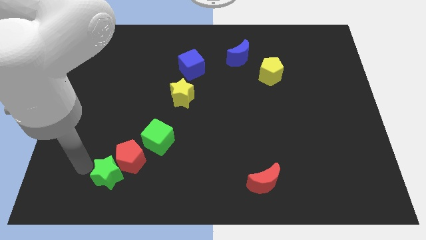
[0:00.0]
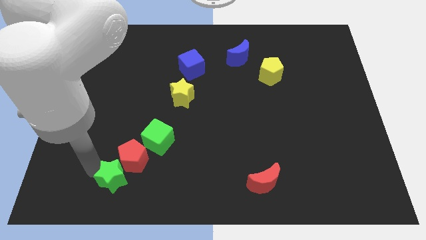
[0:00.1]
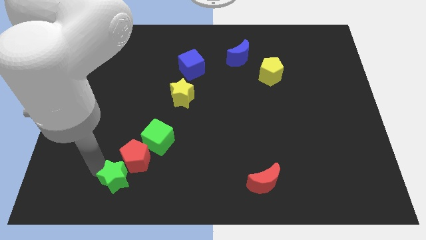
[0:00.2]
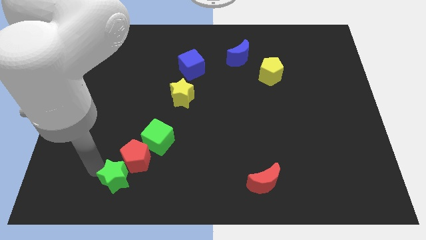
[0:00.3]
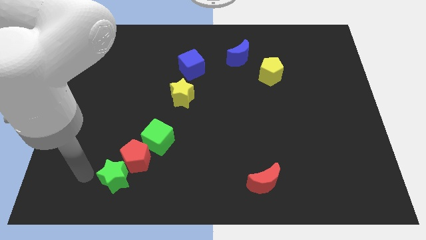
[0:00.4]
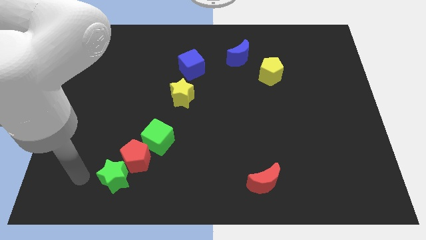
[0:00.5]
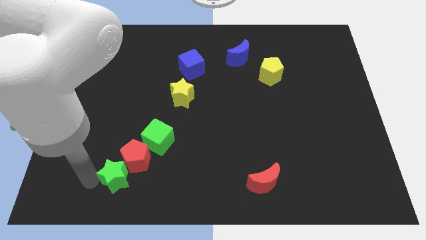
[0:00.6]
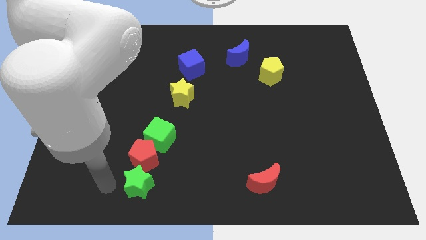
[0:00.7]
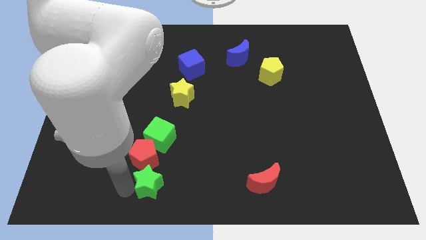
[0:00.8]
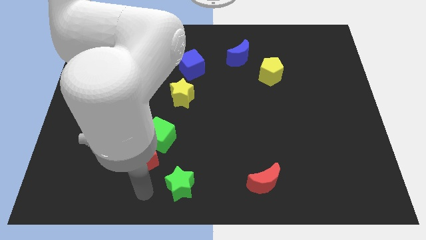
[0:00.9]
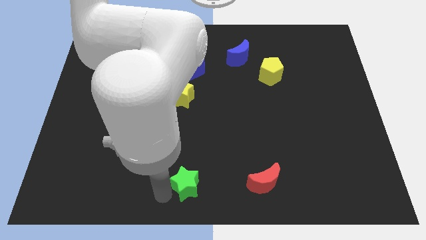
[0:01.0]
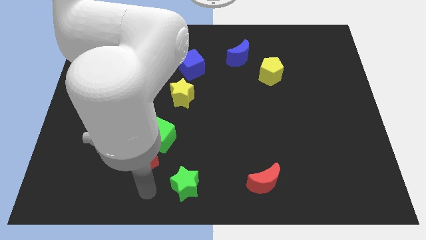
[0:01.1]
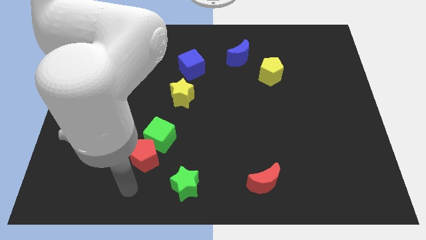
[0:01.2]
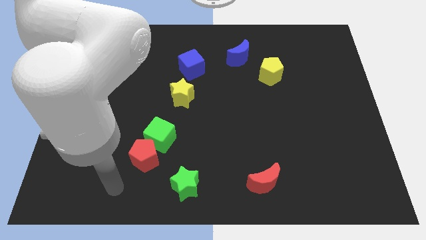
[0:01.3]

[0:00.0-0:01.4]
separate green star and red pentagon

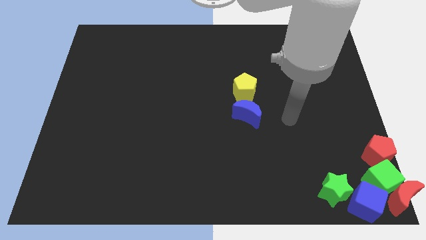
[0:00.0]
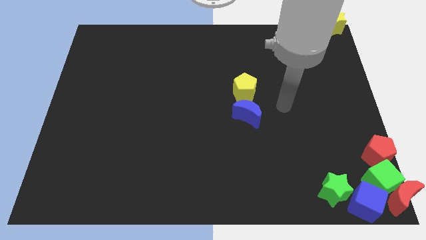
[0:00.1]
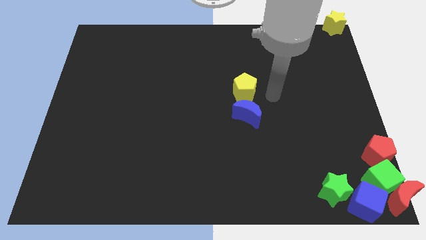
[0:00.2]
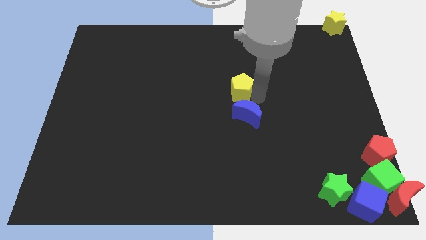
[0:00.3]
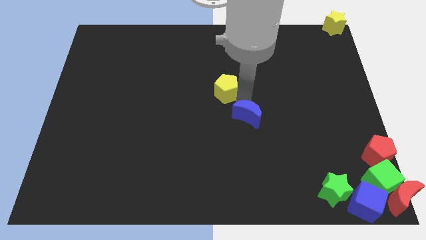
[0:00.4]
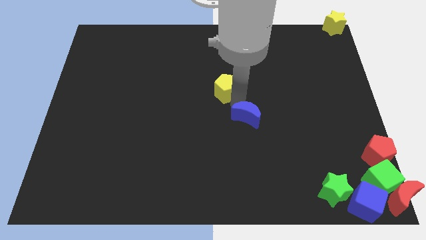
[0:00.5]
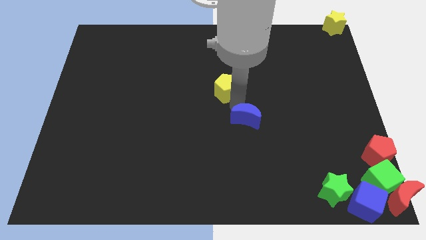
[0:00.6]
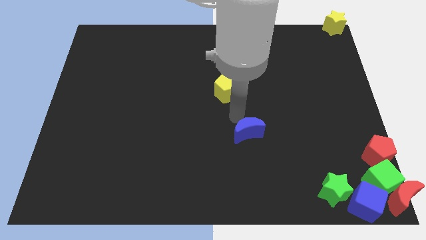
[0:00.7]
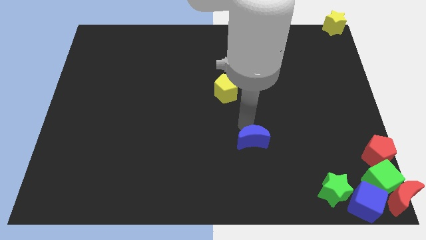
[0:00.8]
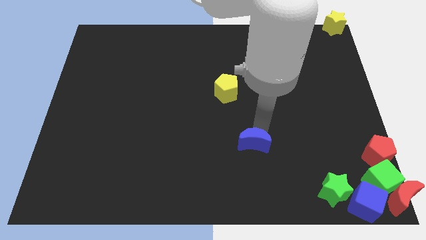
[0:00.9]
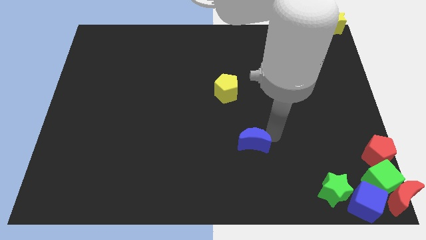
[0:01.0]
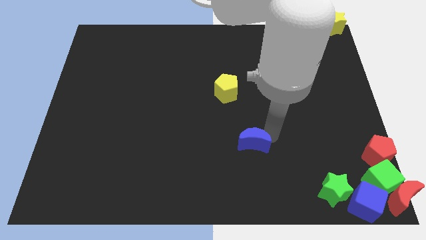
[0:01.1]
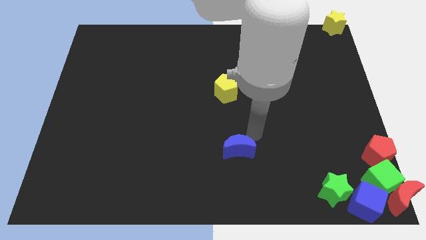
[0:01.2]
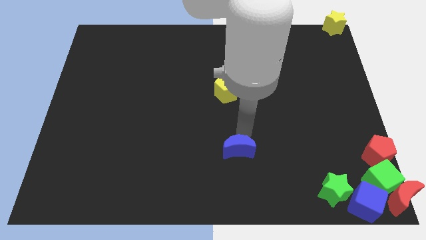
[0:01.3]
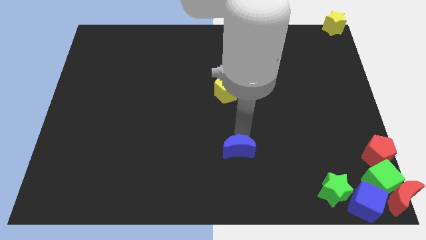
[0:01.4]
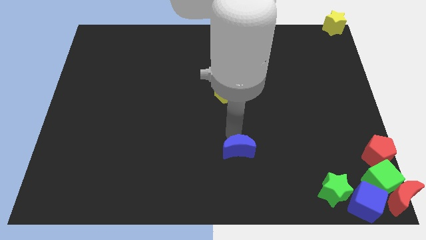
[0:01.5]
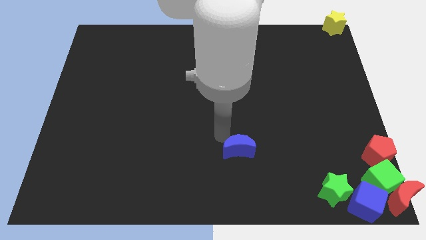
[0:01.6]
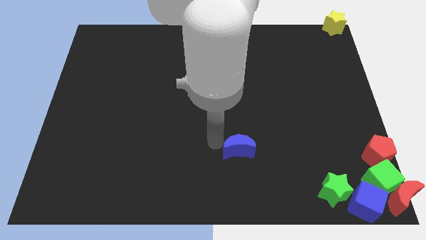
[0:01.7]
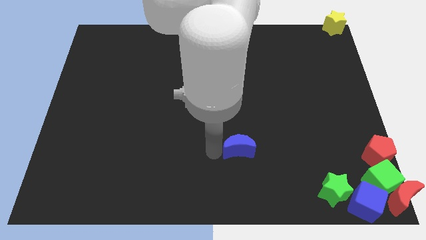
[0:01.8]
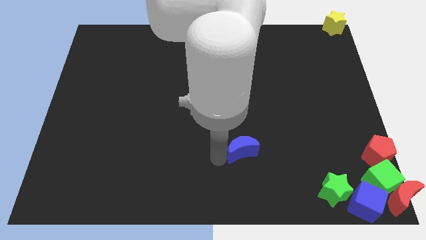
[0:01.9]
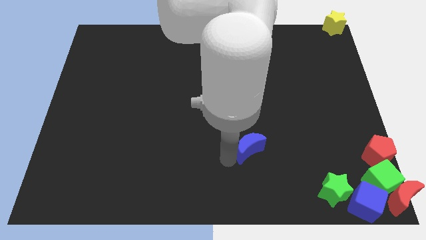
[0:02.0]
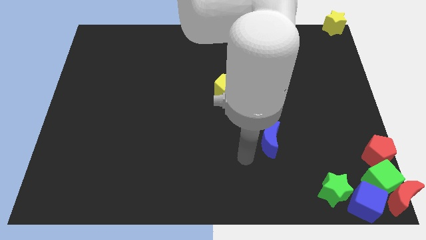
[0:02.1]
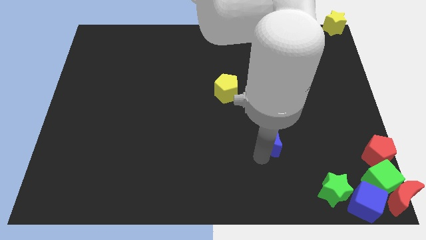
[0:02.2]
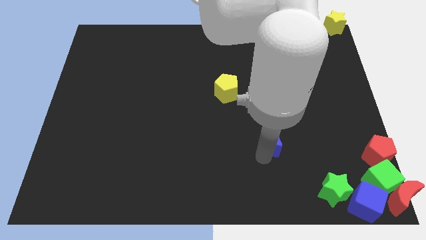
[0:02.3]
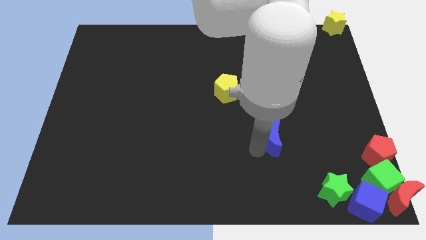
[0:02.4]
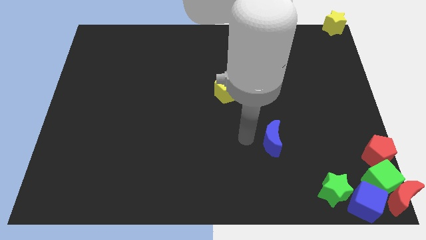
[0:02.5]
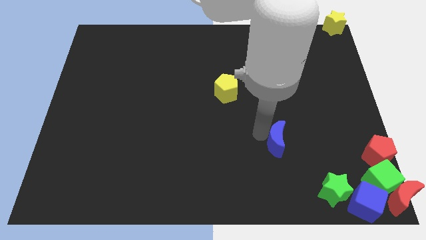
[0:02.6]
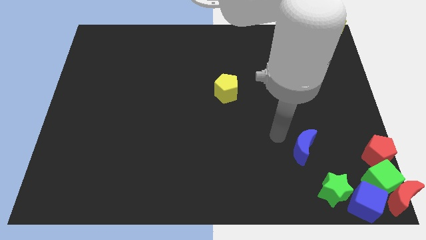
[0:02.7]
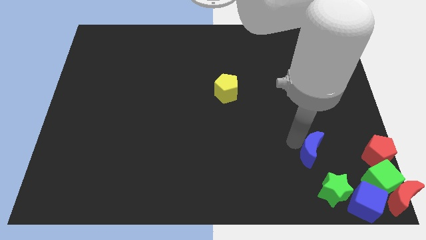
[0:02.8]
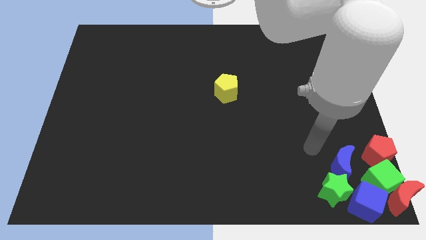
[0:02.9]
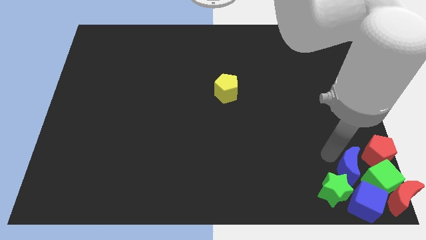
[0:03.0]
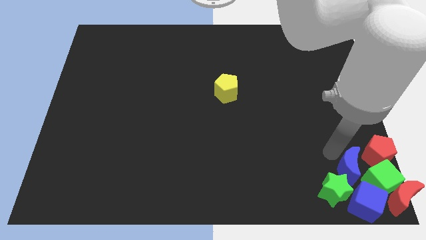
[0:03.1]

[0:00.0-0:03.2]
place blue crescent above blue cube

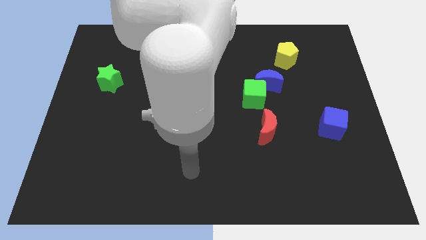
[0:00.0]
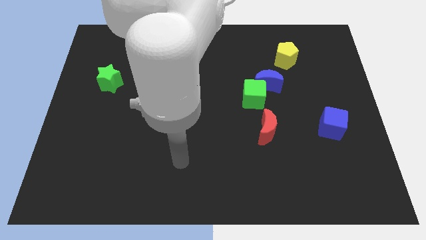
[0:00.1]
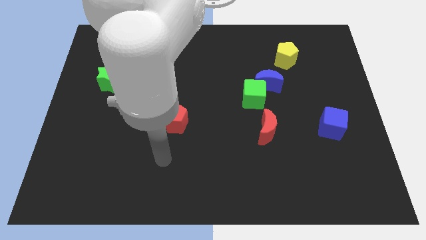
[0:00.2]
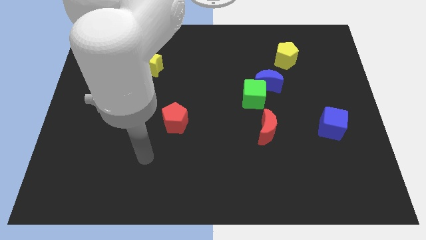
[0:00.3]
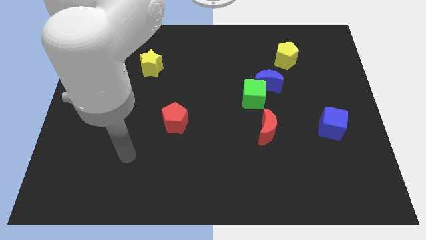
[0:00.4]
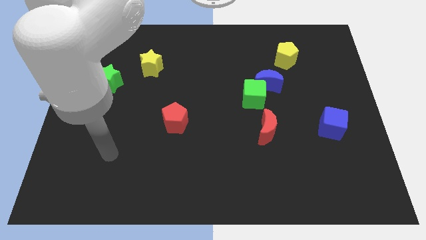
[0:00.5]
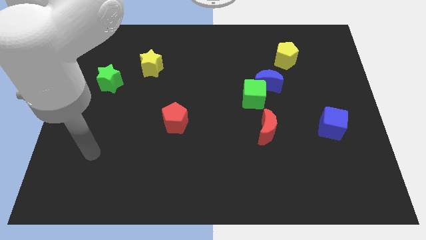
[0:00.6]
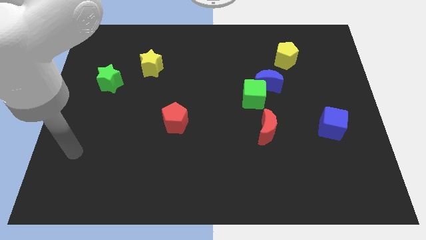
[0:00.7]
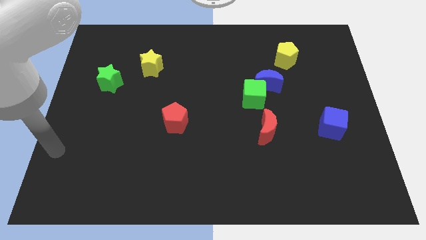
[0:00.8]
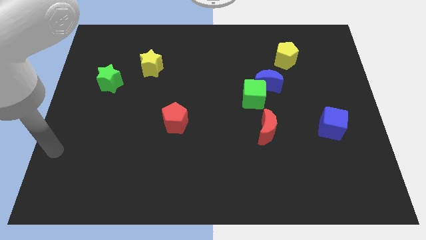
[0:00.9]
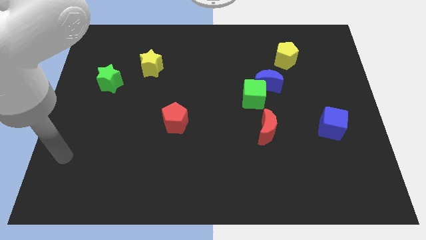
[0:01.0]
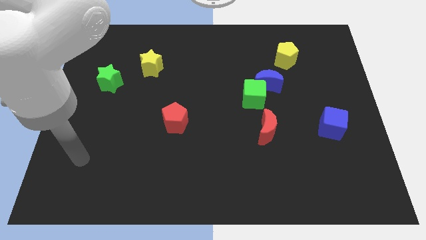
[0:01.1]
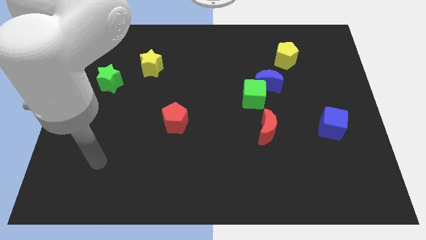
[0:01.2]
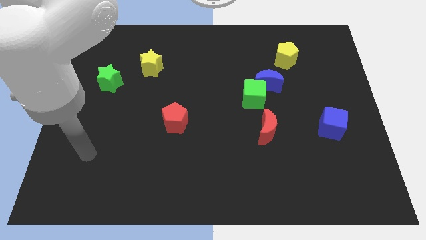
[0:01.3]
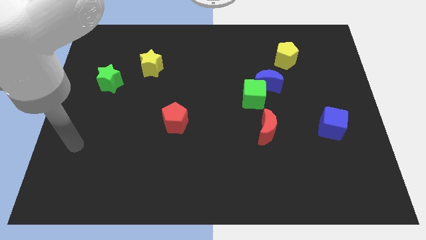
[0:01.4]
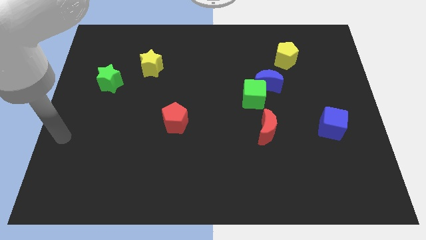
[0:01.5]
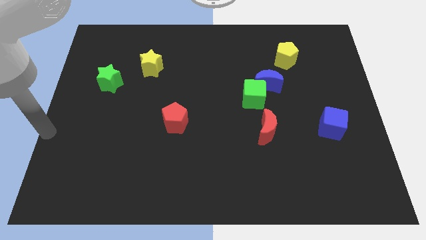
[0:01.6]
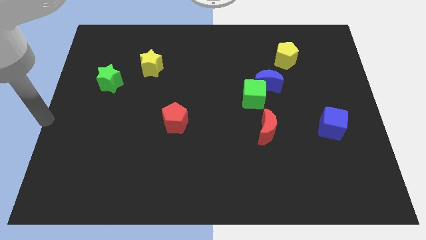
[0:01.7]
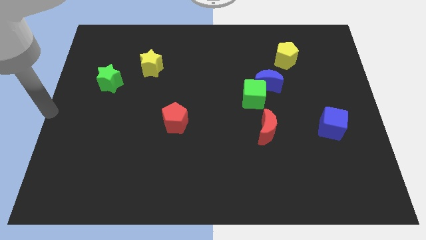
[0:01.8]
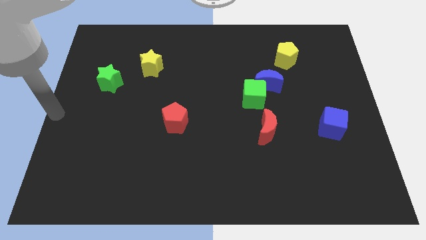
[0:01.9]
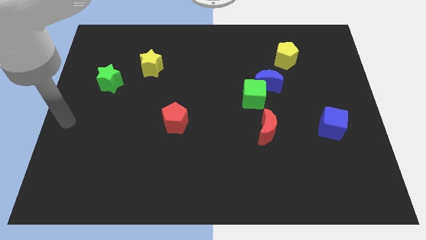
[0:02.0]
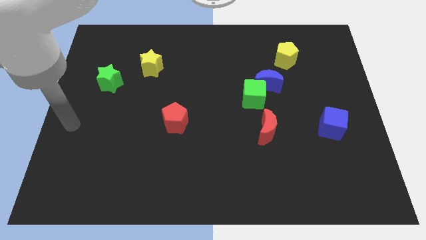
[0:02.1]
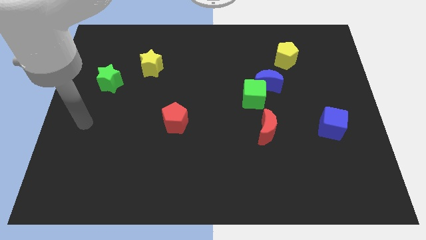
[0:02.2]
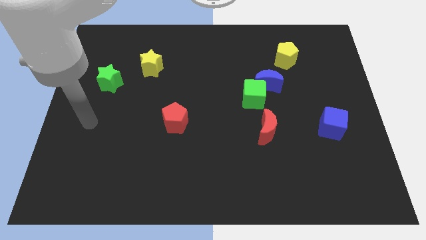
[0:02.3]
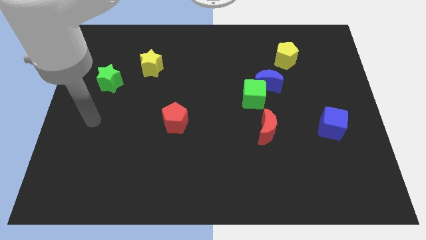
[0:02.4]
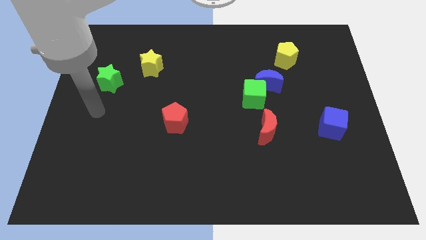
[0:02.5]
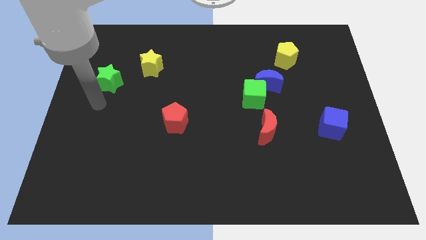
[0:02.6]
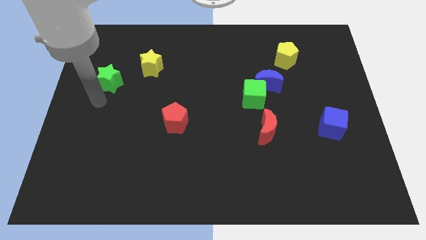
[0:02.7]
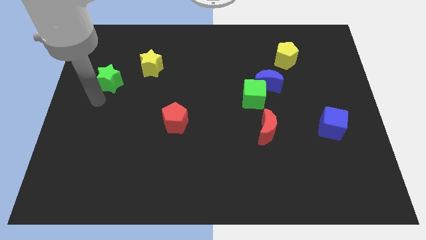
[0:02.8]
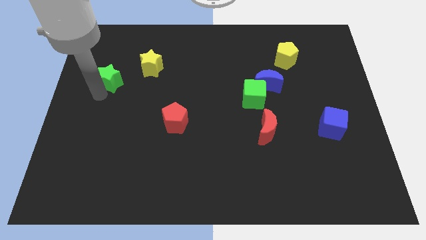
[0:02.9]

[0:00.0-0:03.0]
touch the bottom of green star

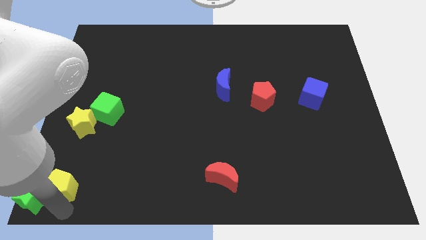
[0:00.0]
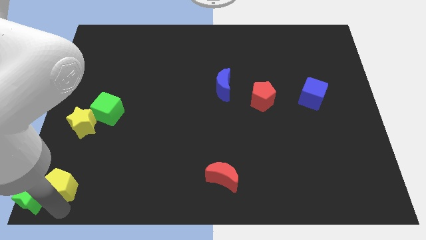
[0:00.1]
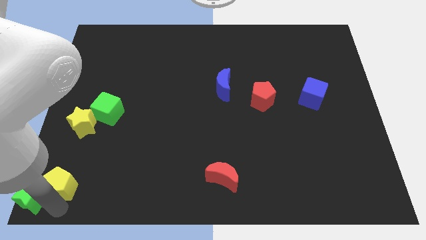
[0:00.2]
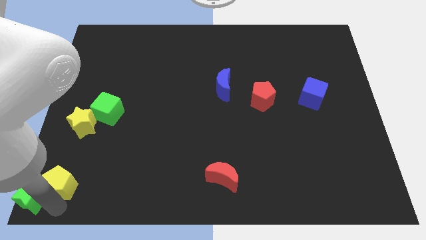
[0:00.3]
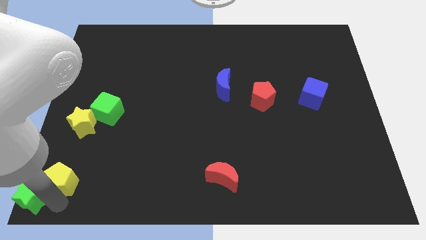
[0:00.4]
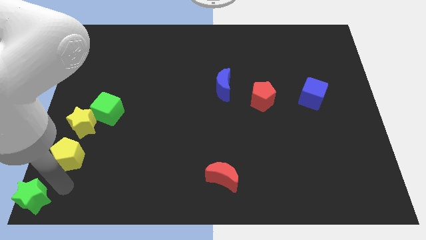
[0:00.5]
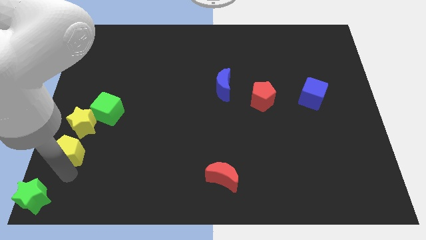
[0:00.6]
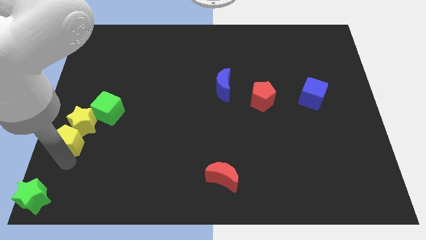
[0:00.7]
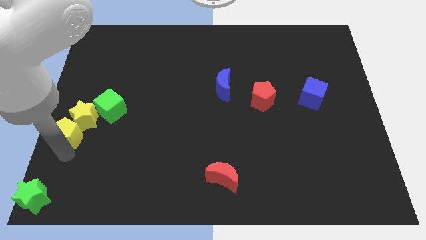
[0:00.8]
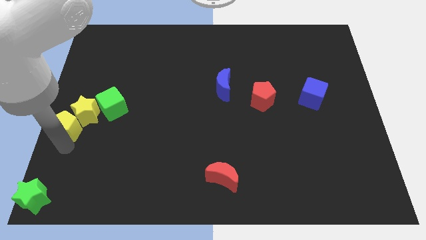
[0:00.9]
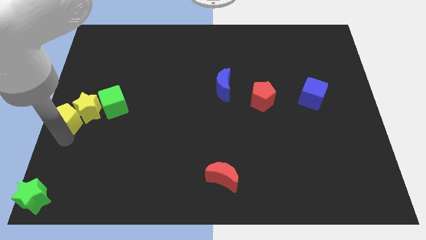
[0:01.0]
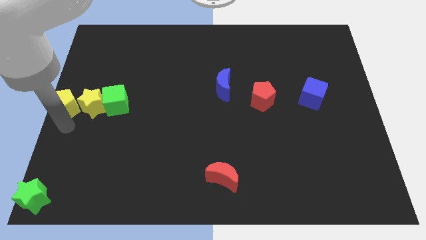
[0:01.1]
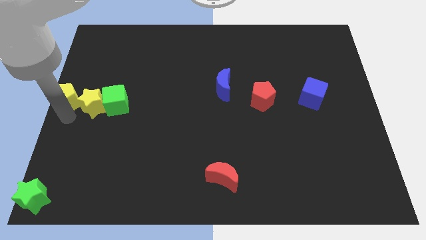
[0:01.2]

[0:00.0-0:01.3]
move the yellow pentagon to the left center of the board
